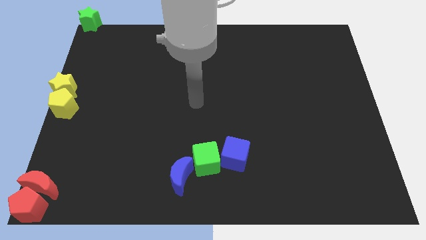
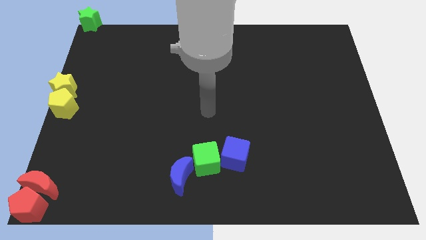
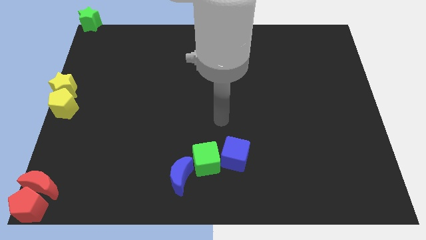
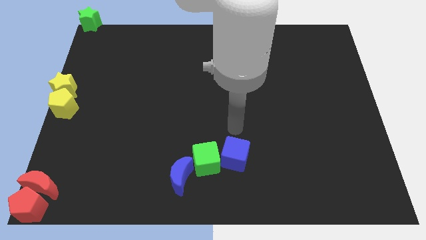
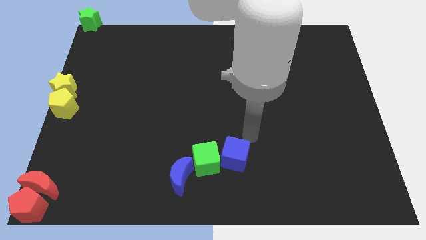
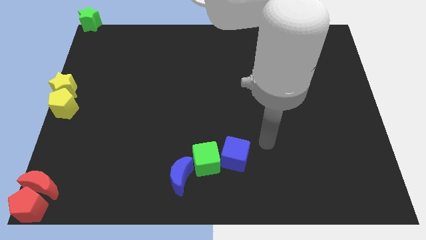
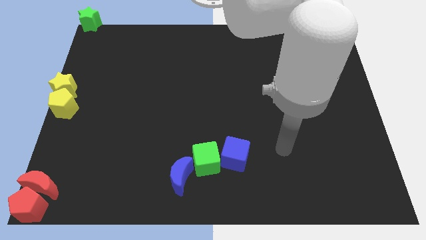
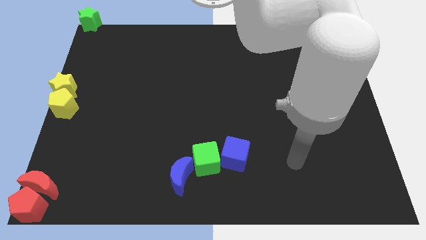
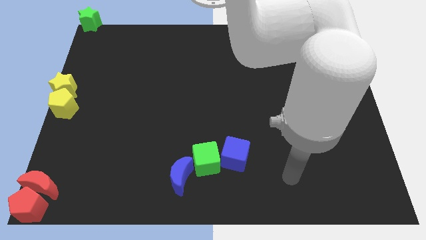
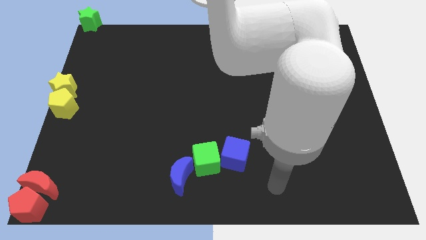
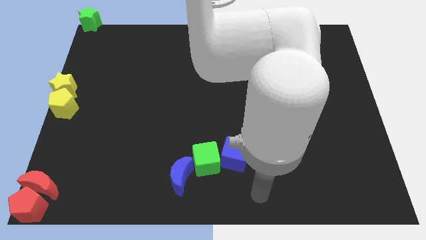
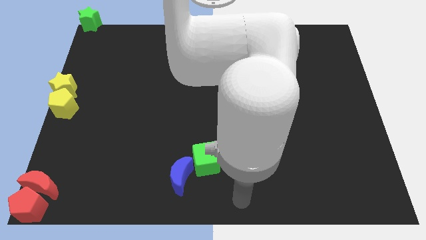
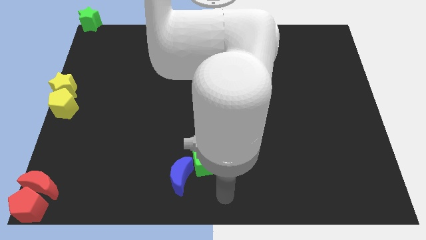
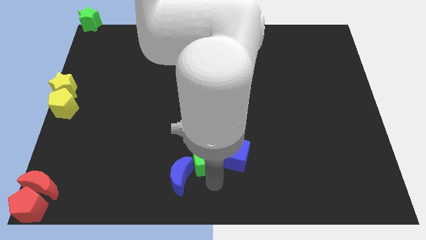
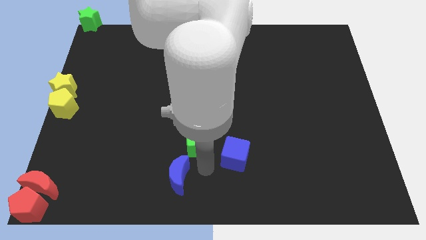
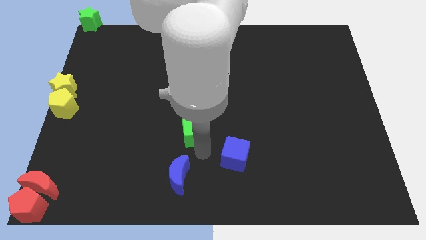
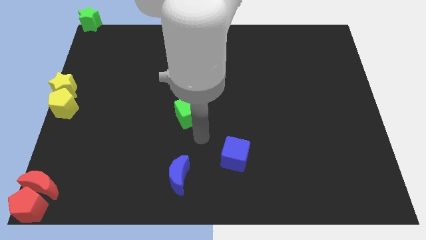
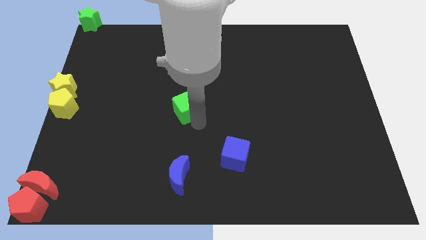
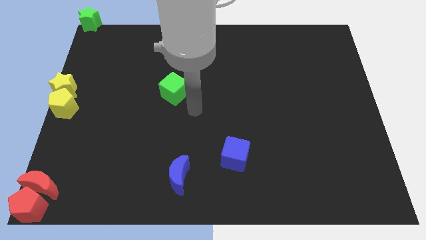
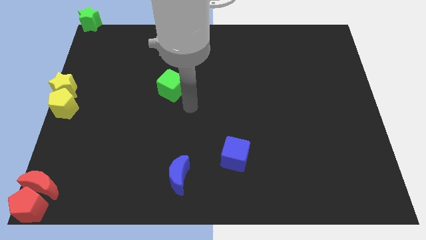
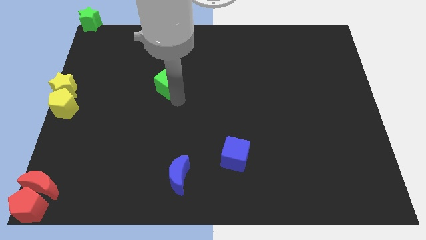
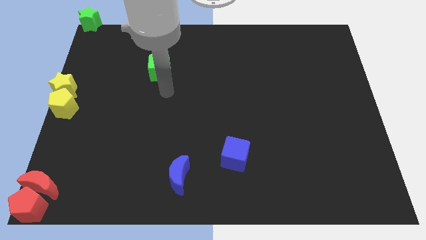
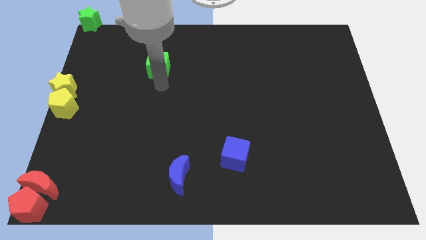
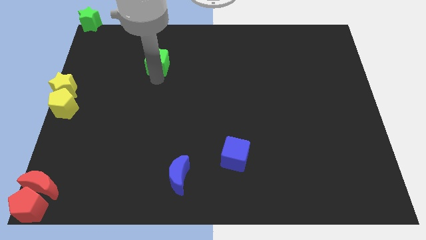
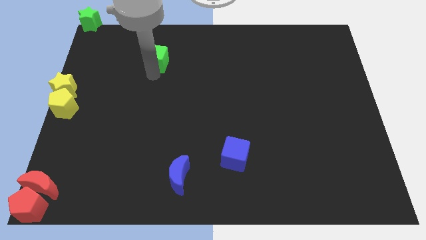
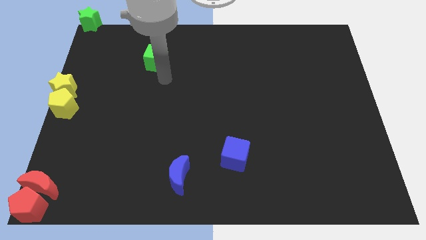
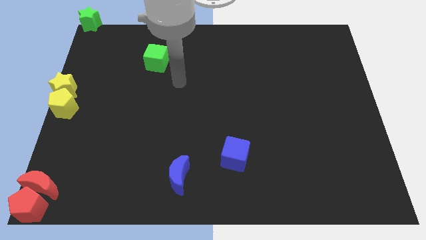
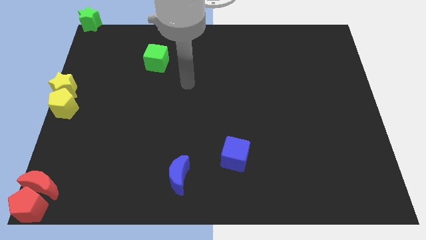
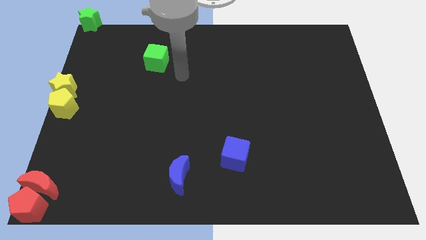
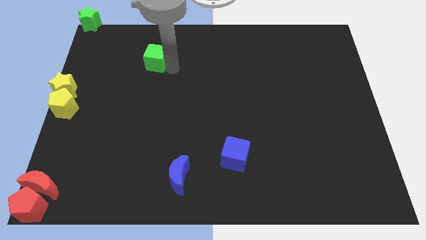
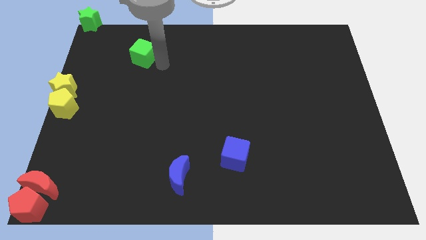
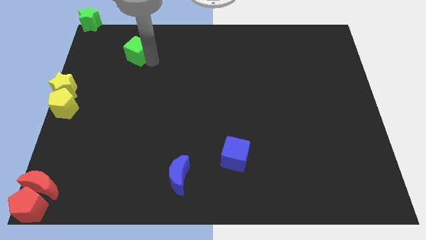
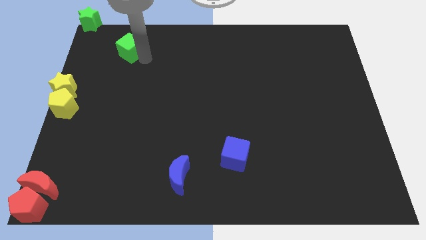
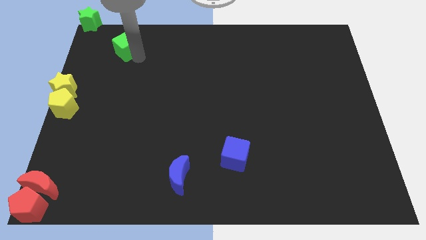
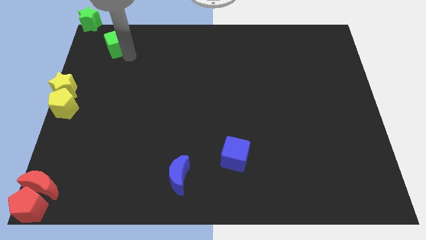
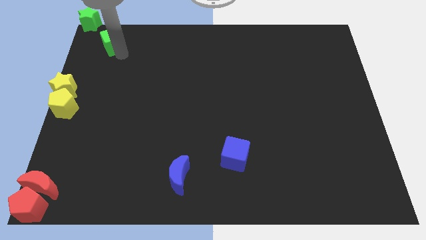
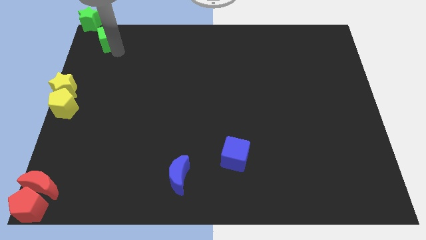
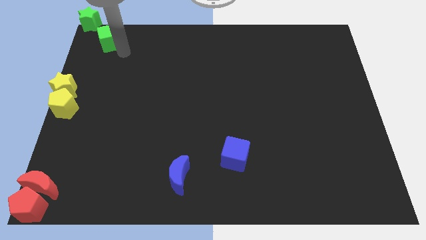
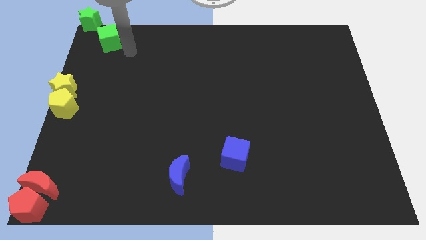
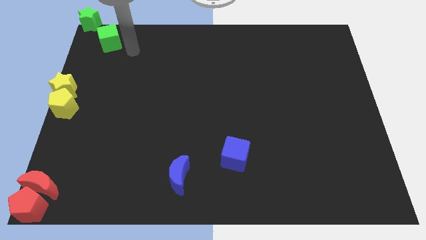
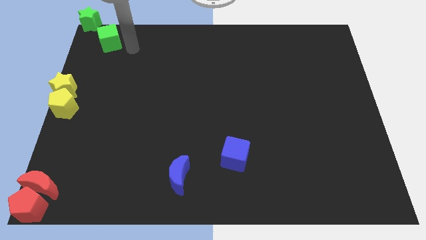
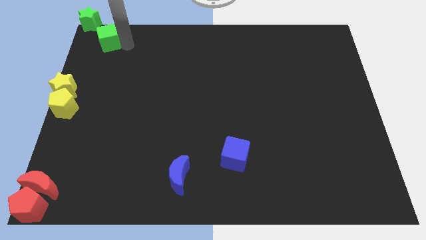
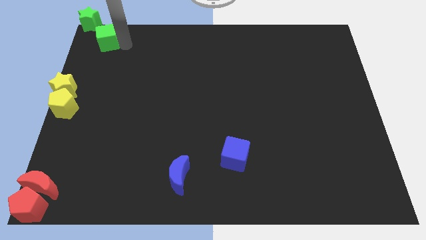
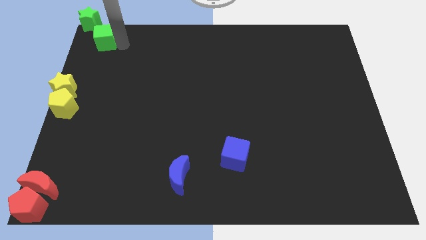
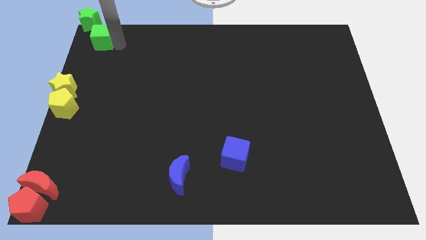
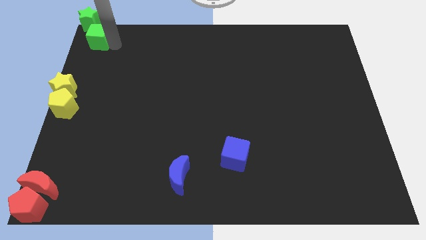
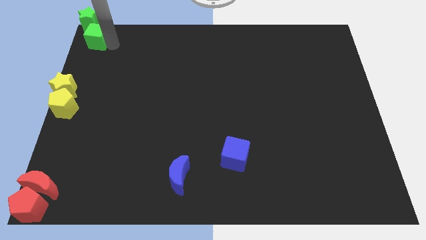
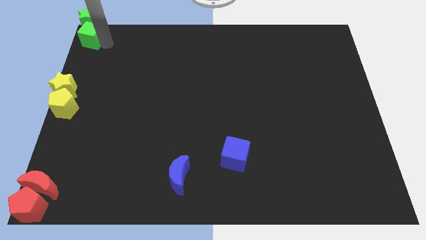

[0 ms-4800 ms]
push the green cube to the bottom side of the green star

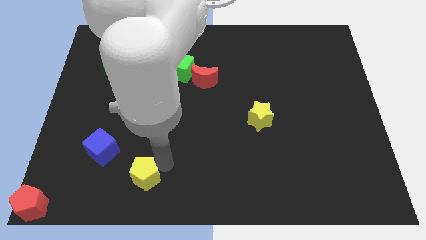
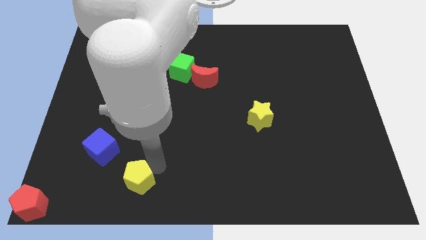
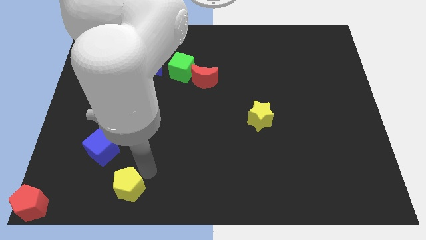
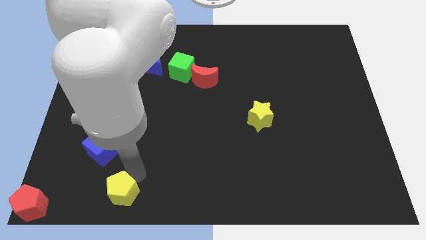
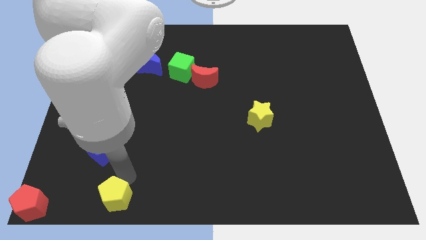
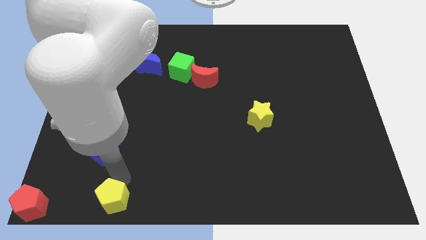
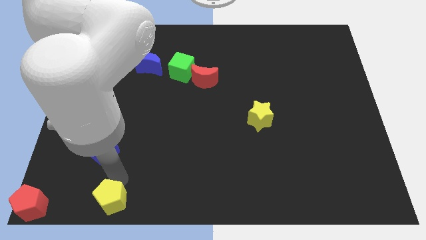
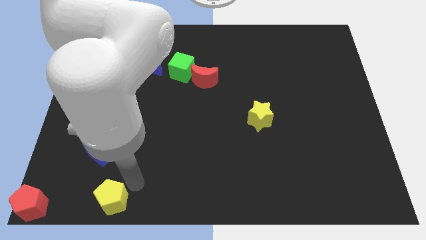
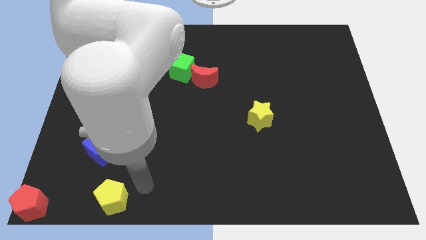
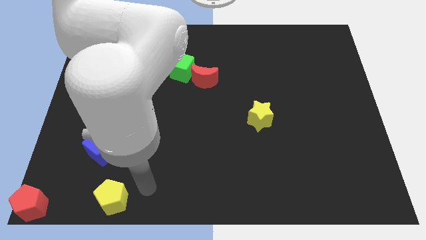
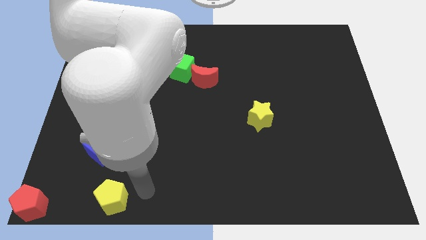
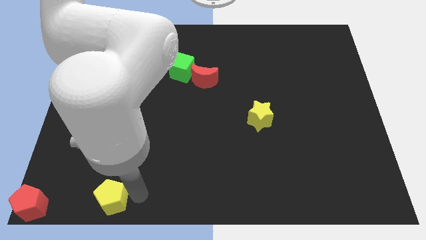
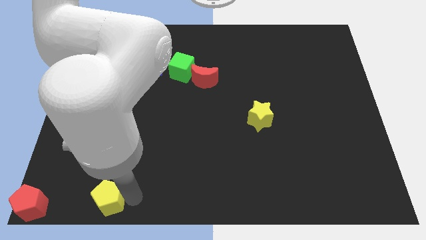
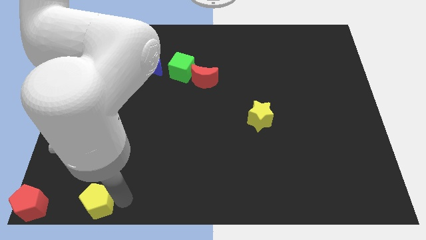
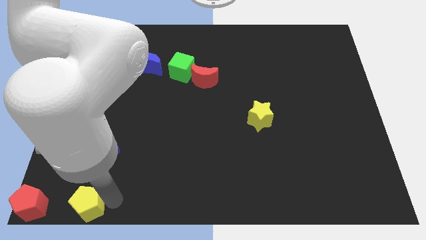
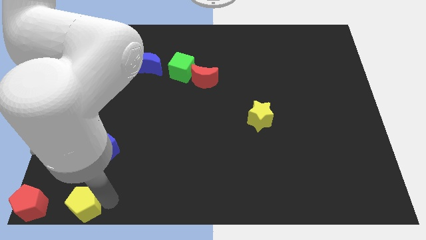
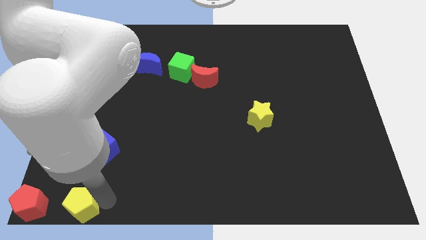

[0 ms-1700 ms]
push the yellow pentagon slightly downwards

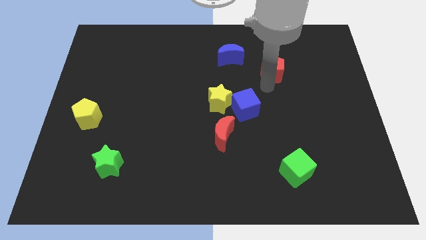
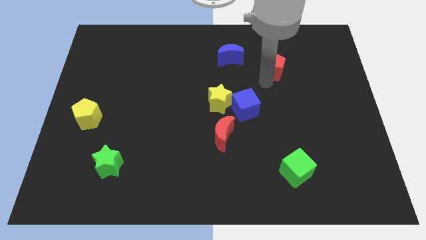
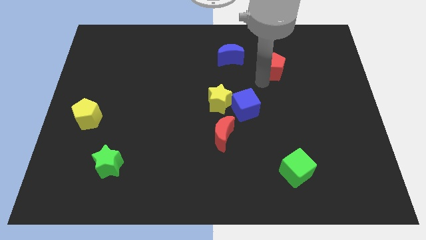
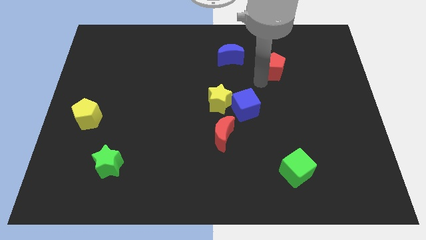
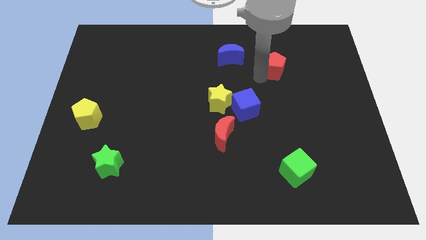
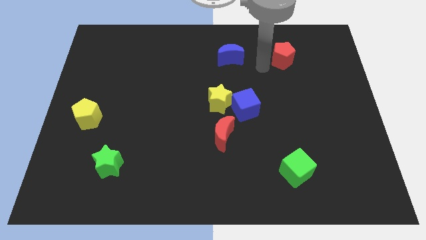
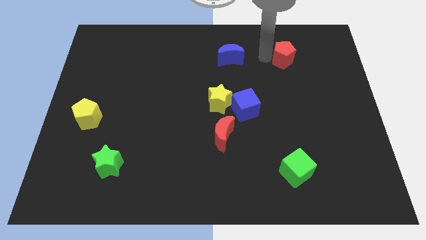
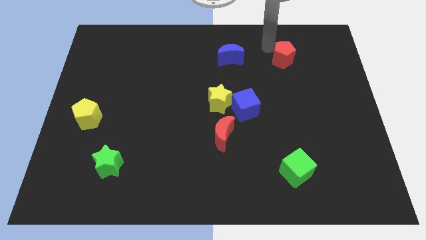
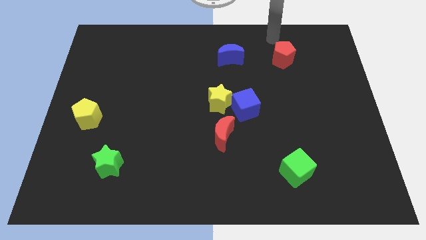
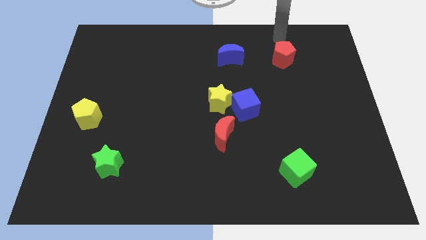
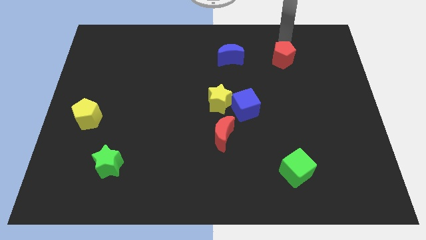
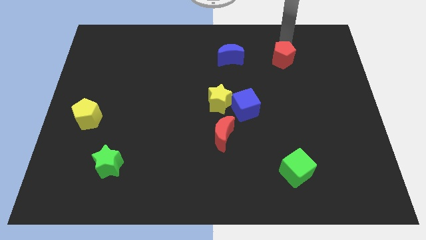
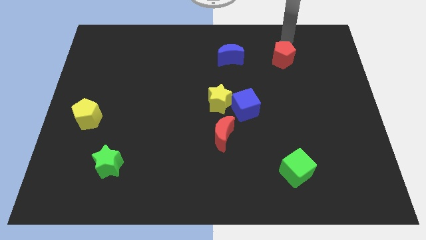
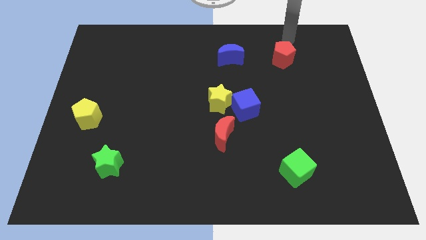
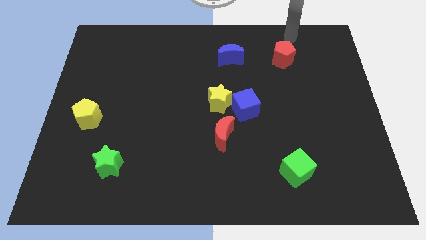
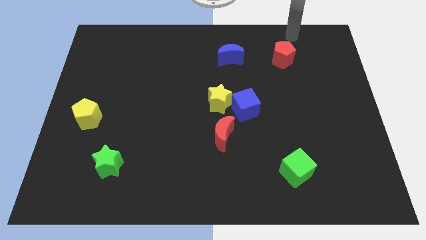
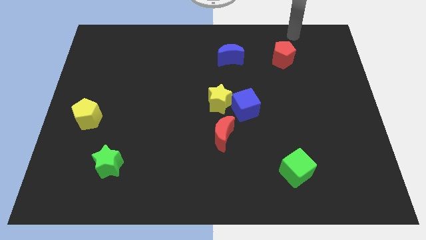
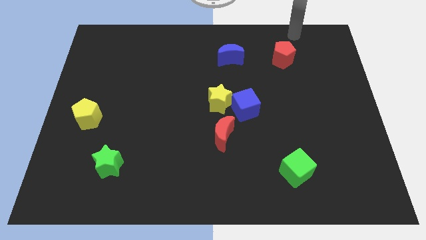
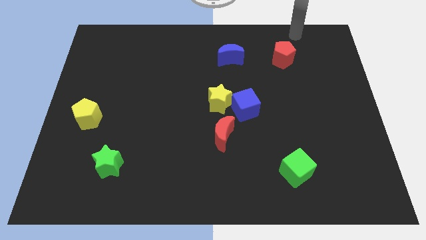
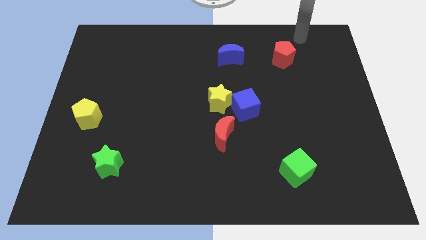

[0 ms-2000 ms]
put the red pentagon to the right of the blue crescent

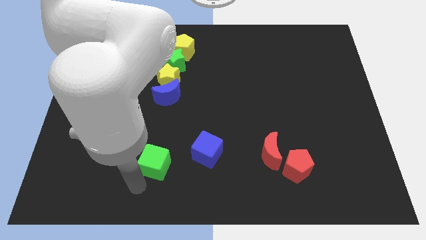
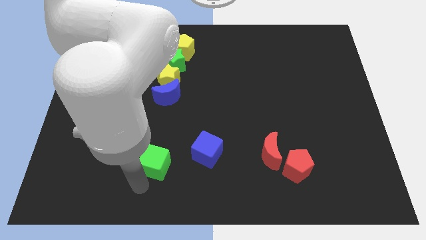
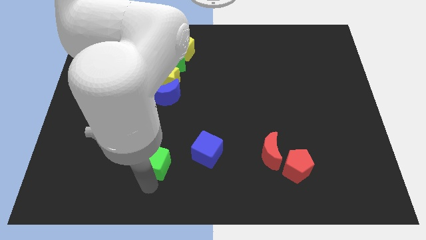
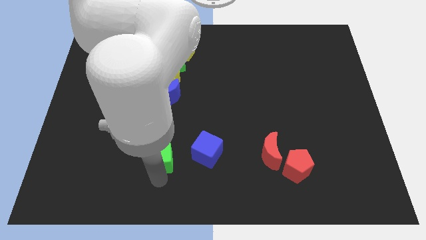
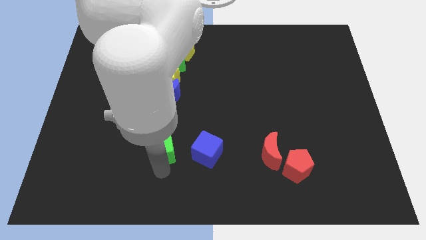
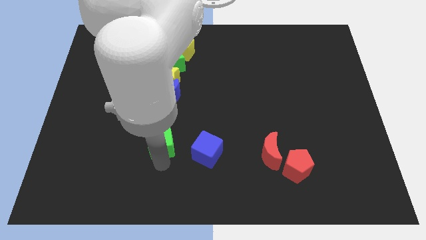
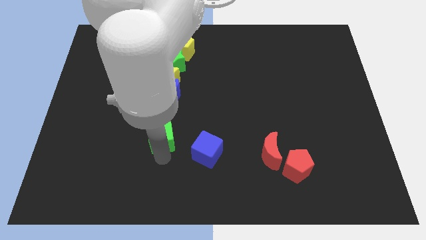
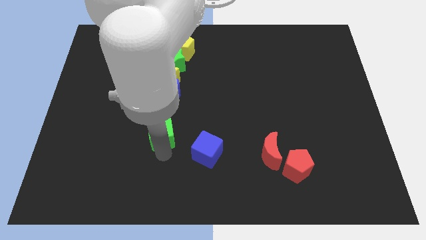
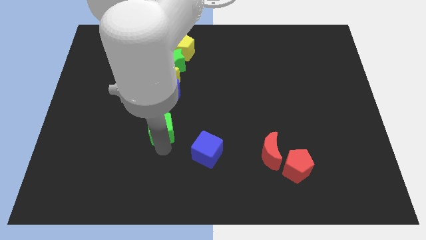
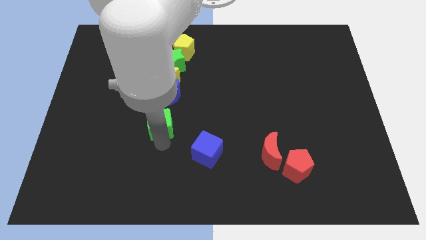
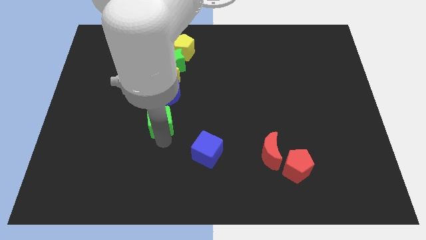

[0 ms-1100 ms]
move green cube towards blue moon
